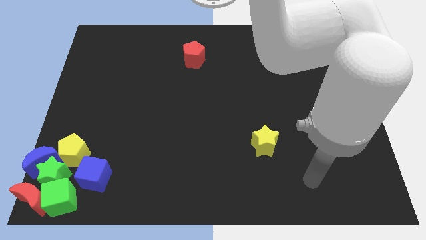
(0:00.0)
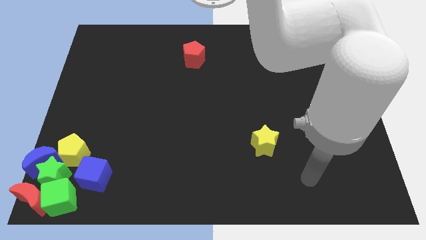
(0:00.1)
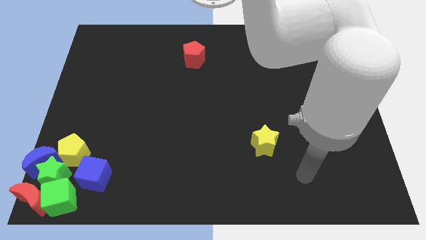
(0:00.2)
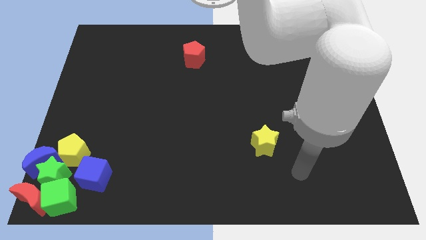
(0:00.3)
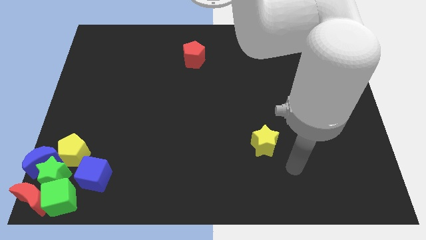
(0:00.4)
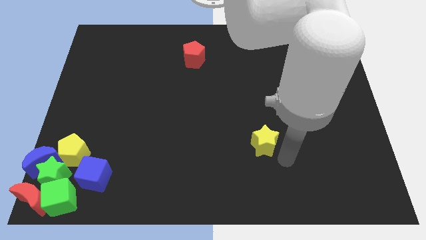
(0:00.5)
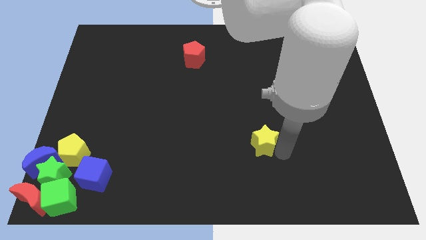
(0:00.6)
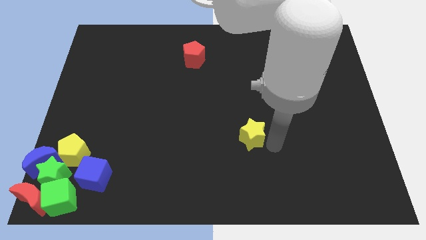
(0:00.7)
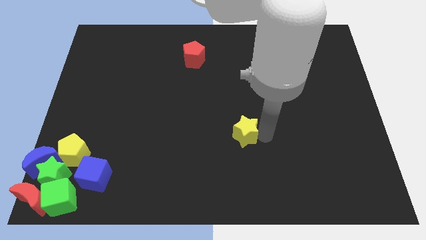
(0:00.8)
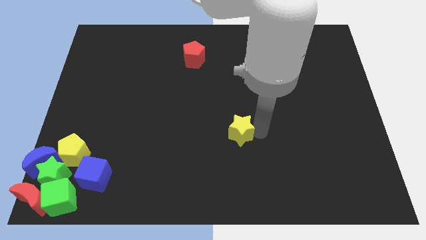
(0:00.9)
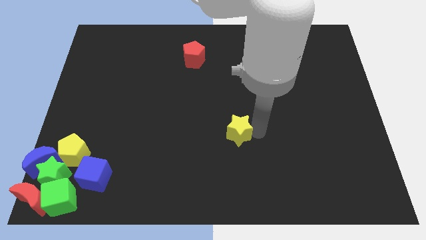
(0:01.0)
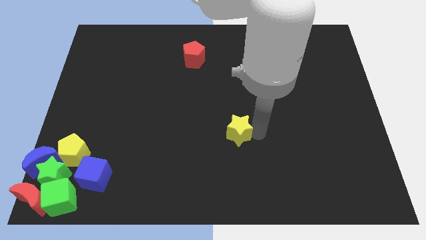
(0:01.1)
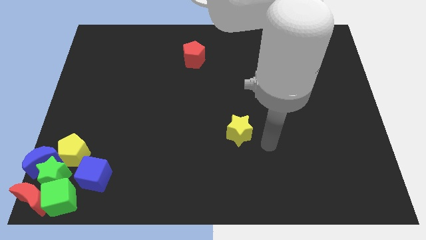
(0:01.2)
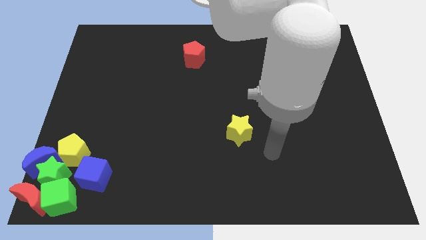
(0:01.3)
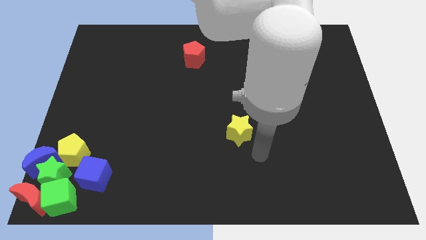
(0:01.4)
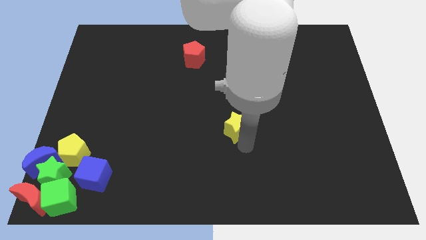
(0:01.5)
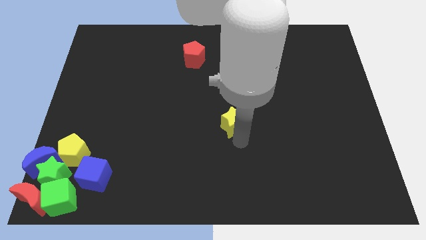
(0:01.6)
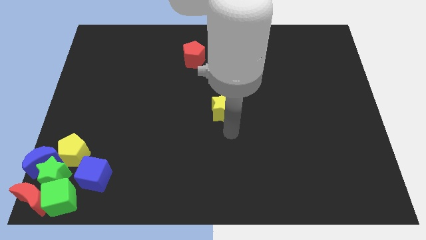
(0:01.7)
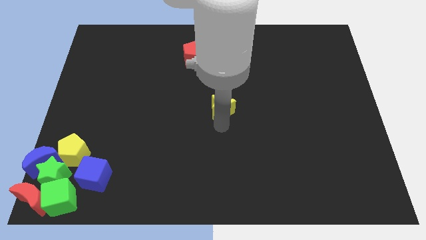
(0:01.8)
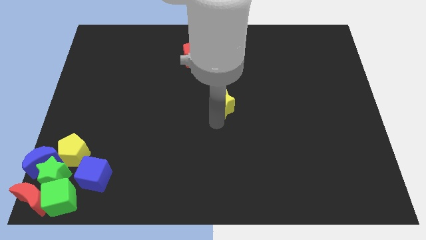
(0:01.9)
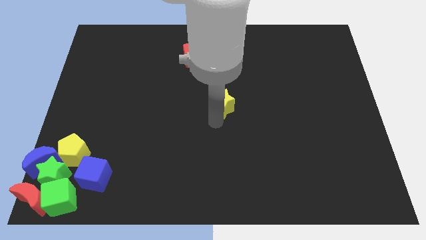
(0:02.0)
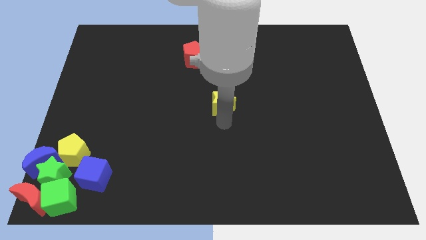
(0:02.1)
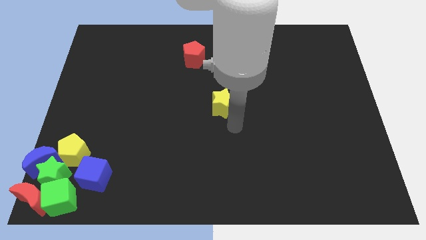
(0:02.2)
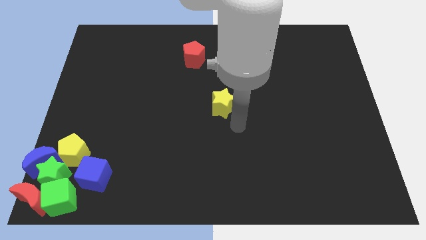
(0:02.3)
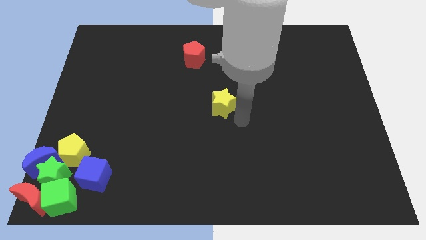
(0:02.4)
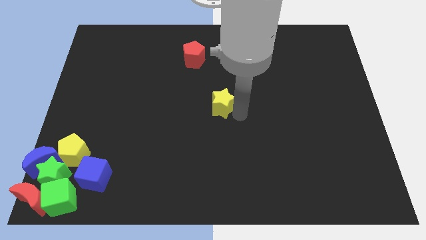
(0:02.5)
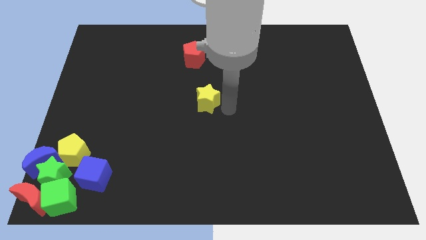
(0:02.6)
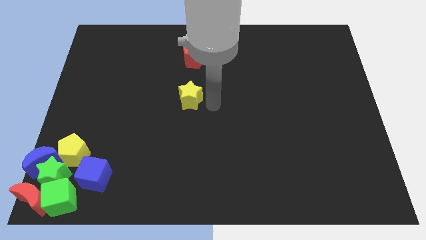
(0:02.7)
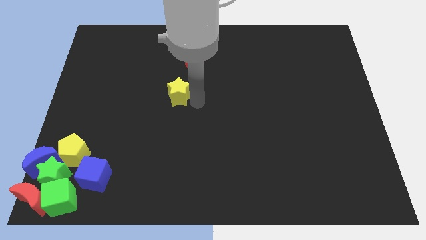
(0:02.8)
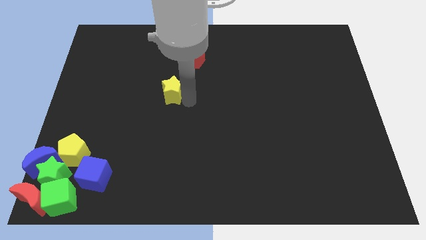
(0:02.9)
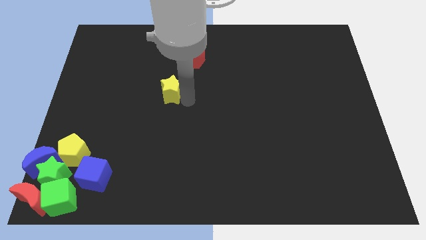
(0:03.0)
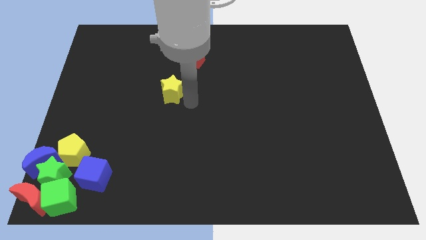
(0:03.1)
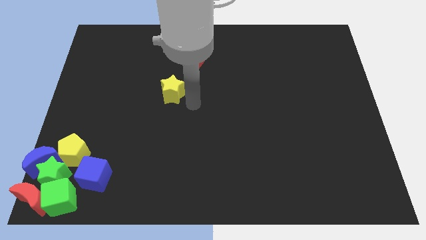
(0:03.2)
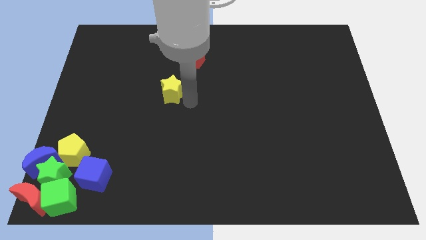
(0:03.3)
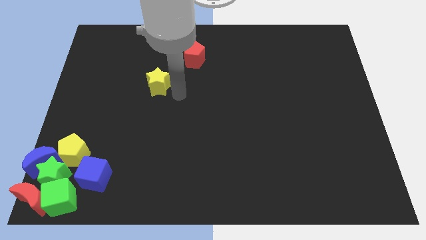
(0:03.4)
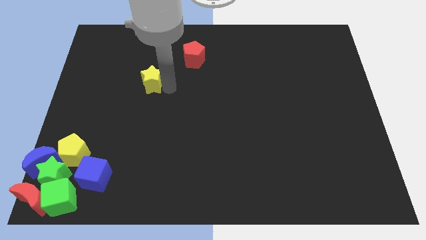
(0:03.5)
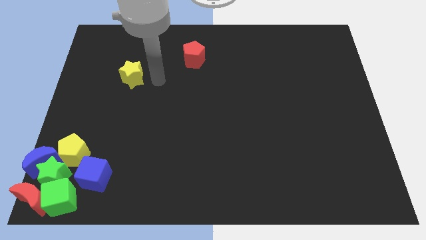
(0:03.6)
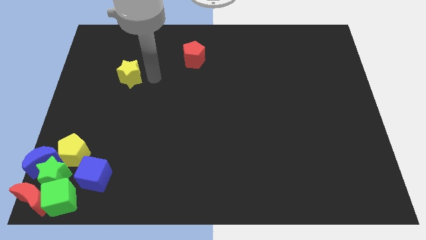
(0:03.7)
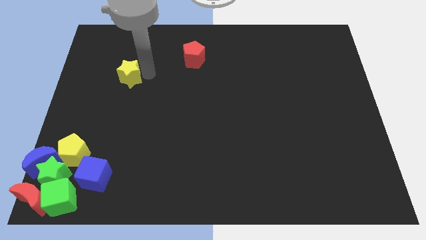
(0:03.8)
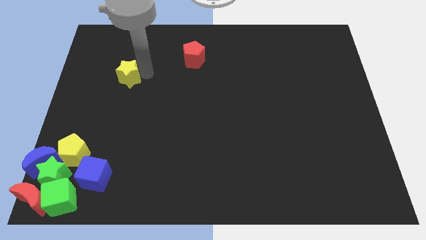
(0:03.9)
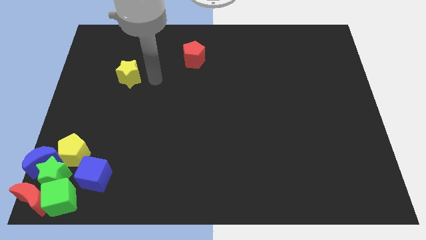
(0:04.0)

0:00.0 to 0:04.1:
move the yellow star diagonal to the red pentagon

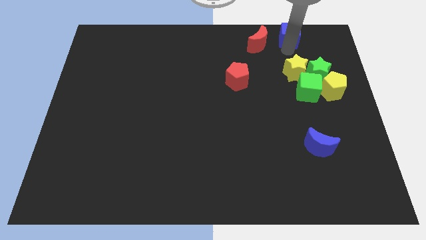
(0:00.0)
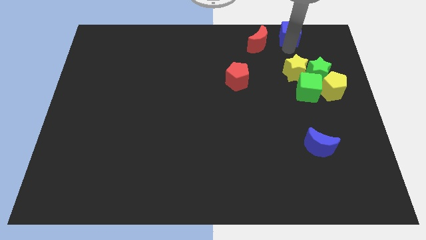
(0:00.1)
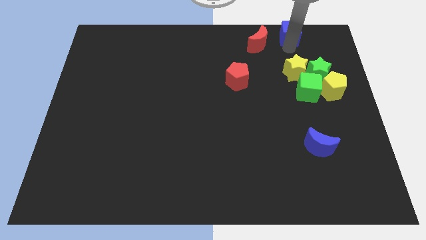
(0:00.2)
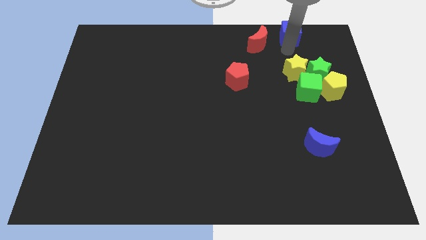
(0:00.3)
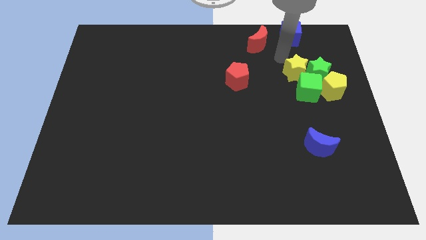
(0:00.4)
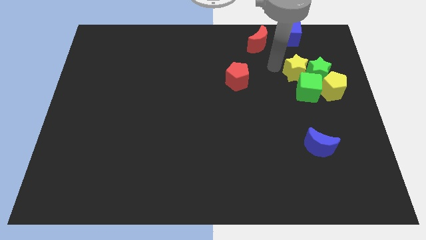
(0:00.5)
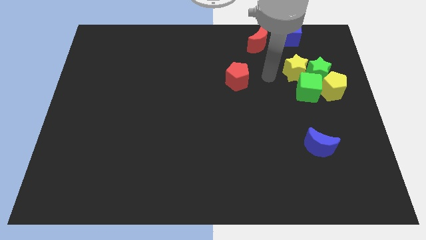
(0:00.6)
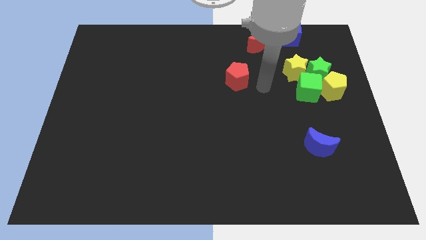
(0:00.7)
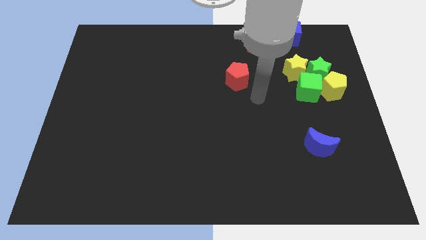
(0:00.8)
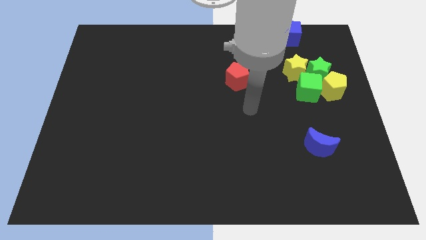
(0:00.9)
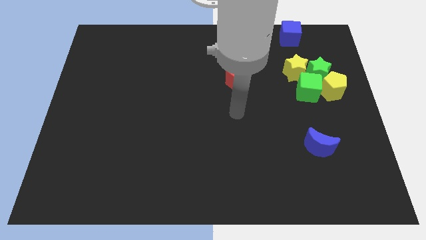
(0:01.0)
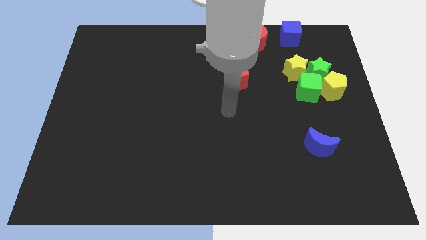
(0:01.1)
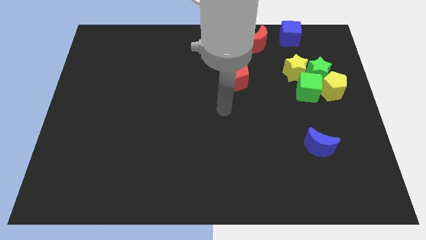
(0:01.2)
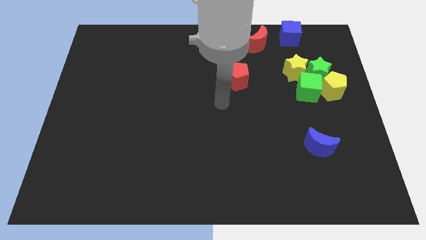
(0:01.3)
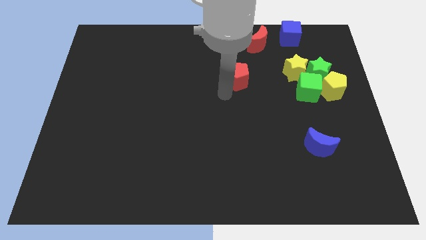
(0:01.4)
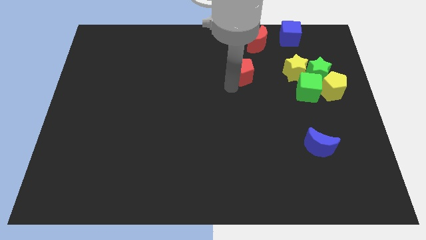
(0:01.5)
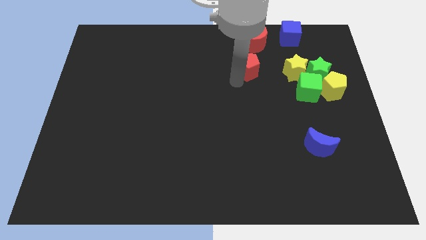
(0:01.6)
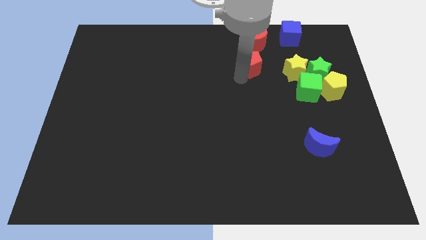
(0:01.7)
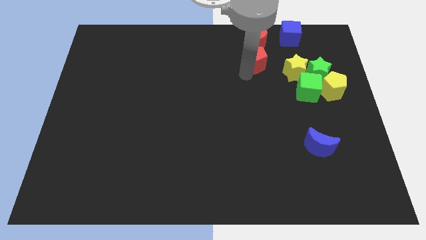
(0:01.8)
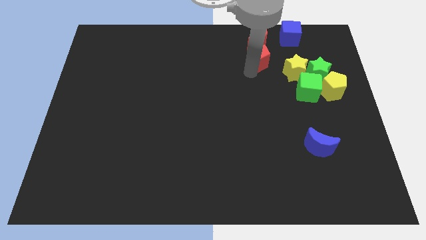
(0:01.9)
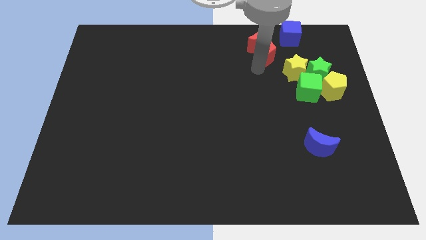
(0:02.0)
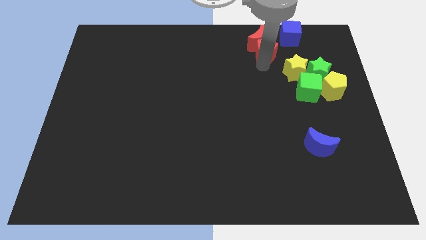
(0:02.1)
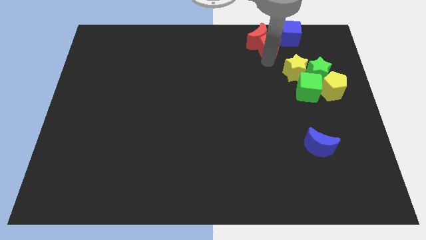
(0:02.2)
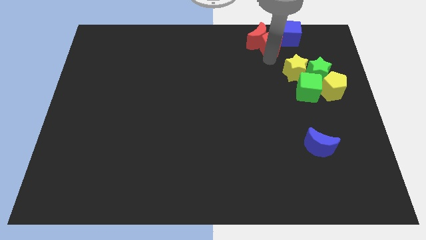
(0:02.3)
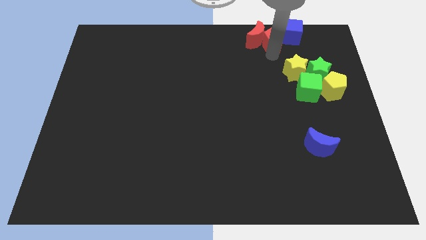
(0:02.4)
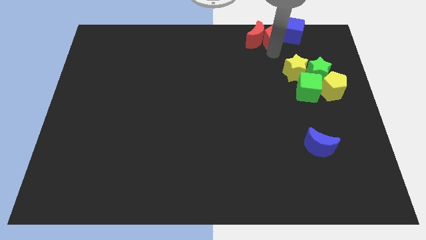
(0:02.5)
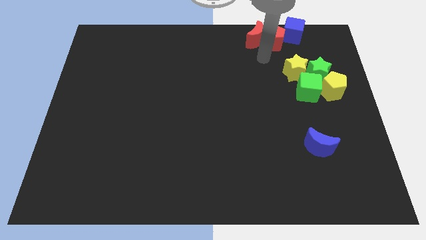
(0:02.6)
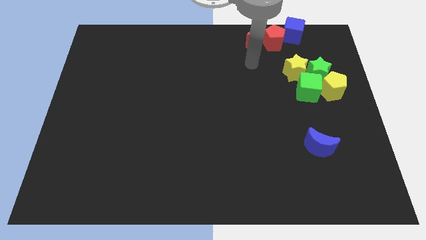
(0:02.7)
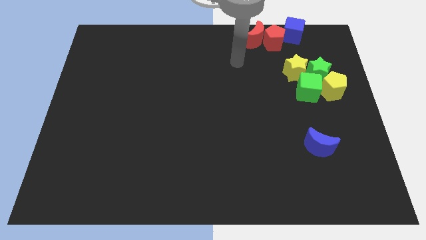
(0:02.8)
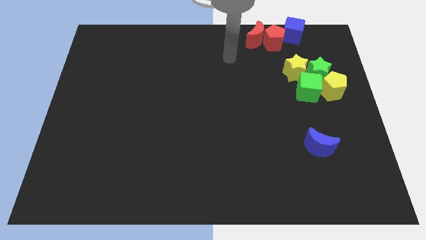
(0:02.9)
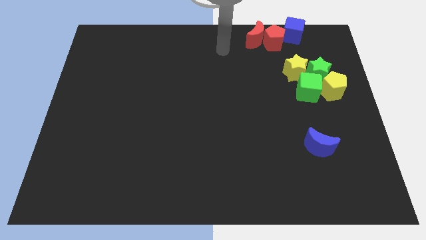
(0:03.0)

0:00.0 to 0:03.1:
push the red pentagon into red crescent into blue cube

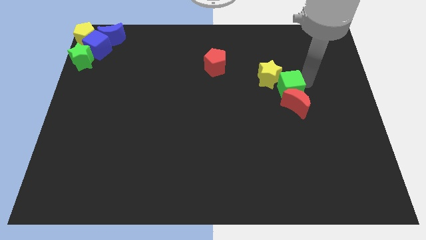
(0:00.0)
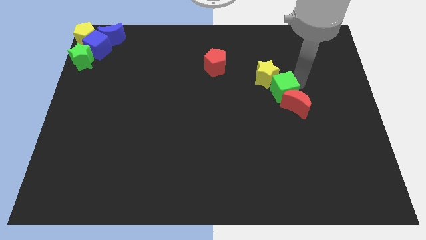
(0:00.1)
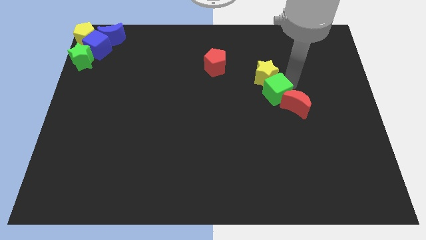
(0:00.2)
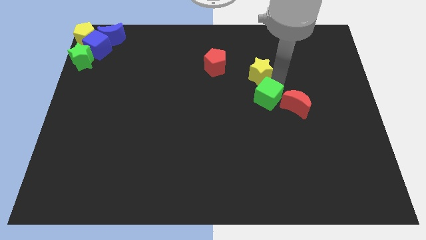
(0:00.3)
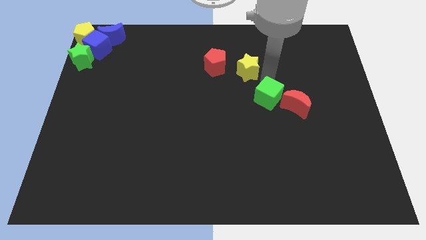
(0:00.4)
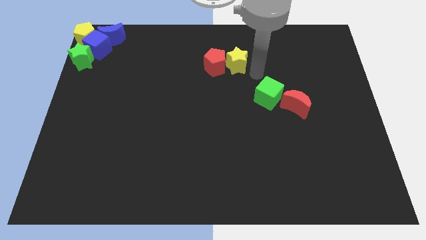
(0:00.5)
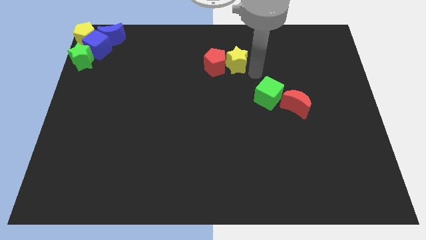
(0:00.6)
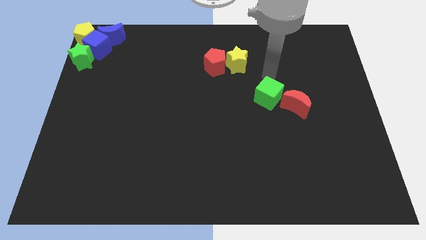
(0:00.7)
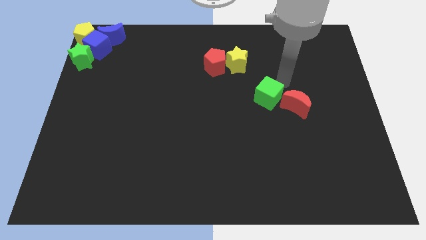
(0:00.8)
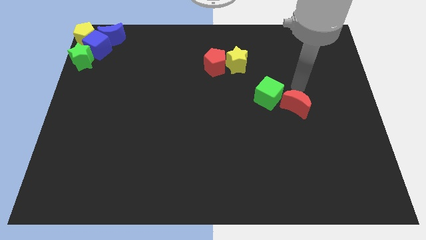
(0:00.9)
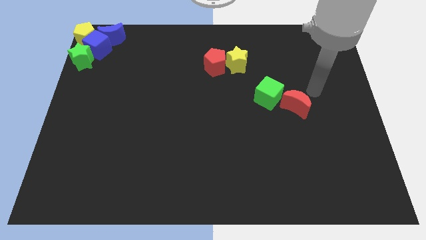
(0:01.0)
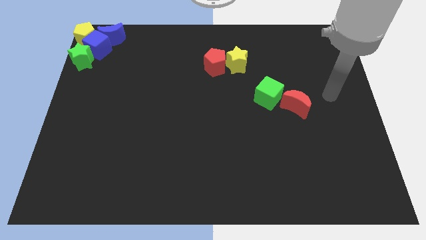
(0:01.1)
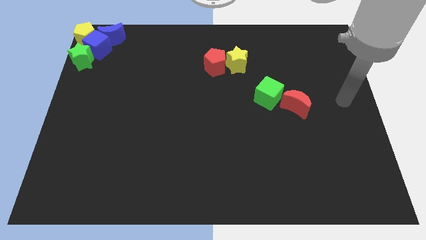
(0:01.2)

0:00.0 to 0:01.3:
push the yellow star to the right of the red pentagon

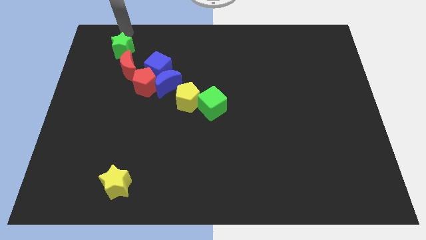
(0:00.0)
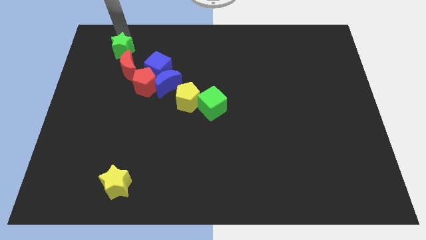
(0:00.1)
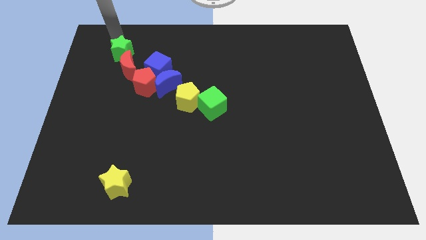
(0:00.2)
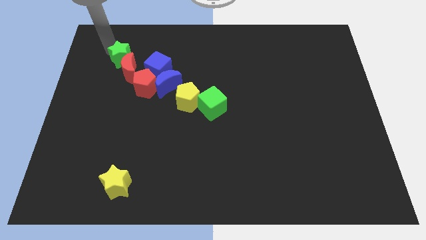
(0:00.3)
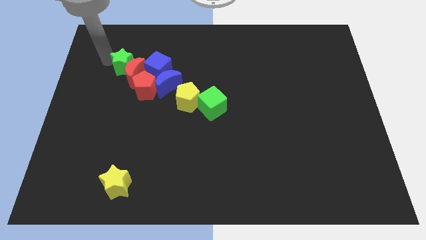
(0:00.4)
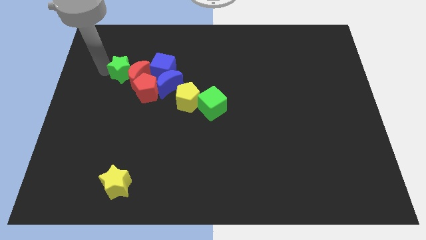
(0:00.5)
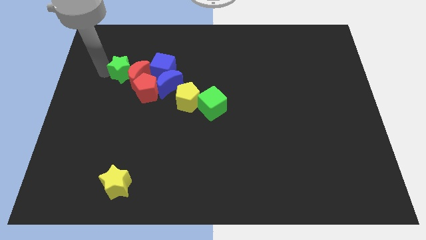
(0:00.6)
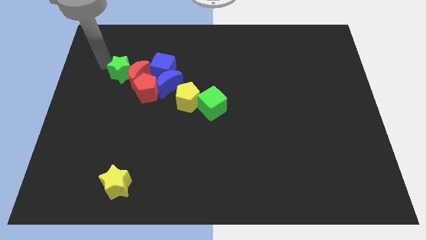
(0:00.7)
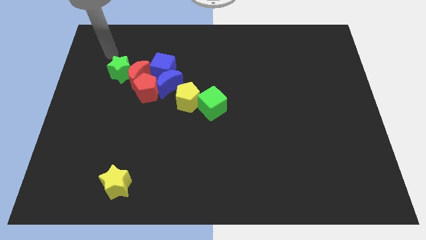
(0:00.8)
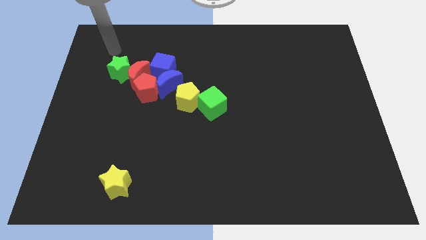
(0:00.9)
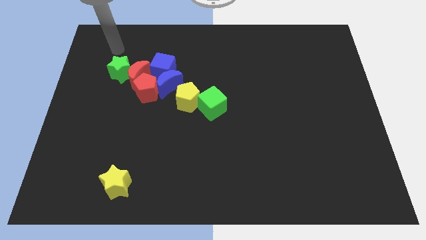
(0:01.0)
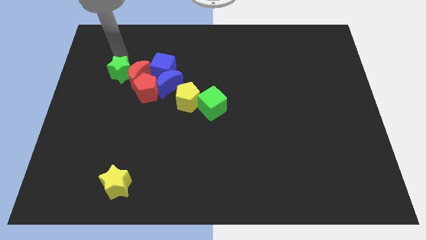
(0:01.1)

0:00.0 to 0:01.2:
move the red moon with green star into the group of blocks
